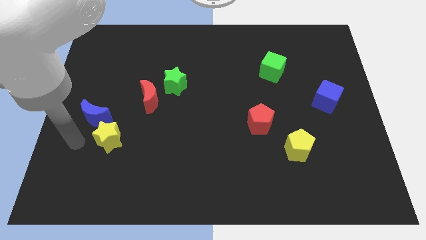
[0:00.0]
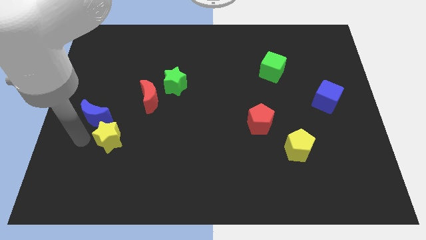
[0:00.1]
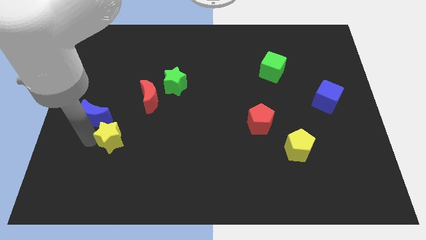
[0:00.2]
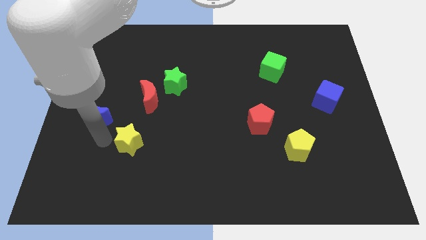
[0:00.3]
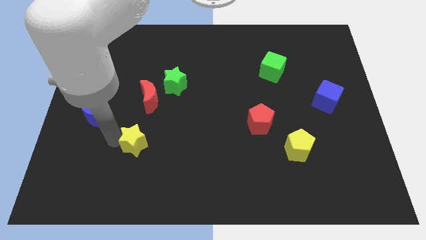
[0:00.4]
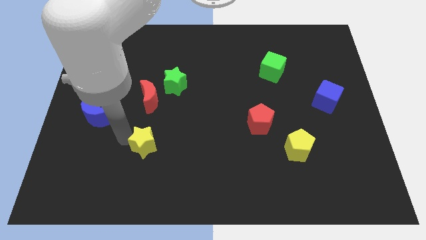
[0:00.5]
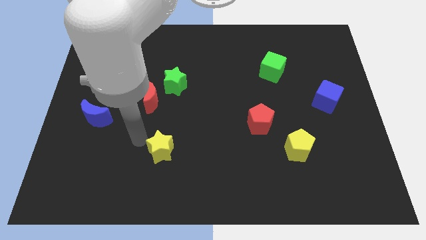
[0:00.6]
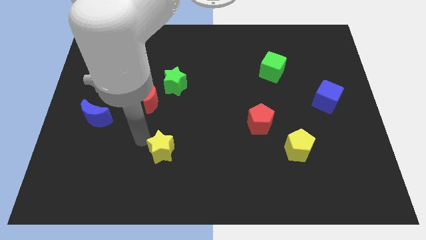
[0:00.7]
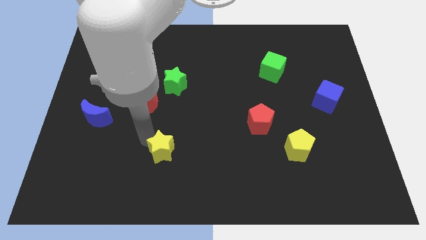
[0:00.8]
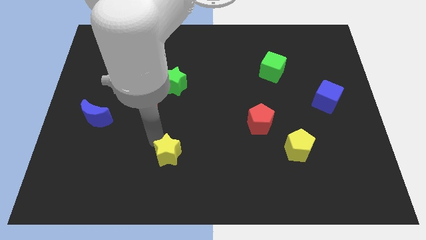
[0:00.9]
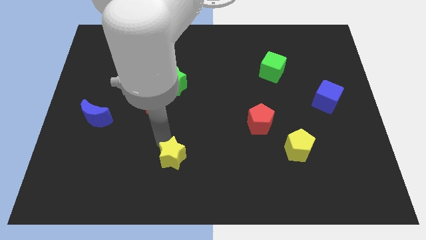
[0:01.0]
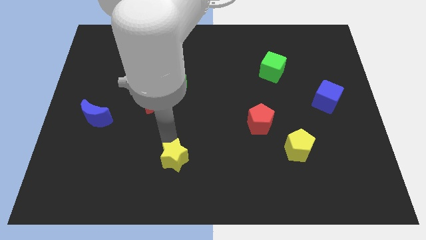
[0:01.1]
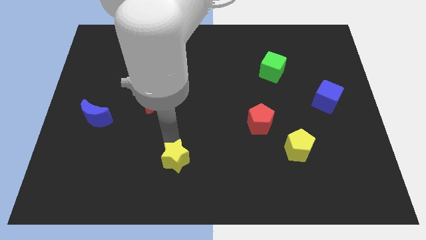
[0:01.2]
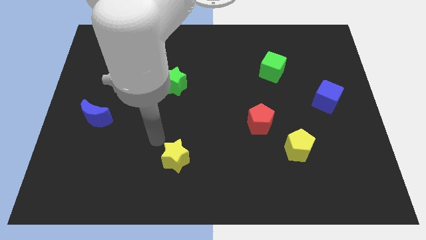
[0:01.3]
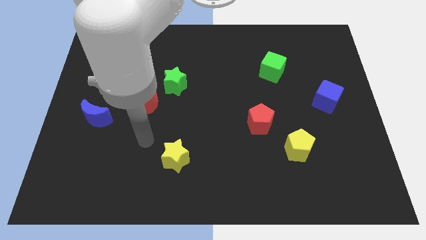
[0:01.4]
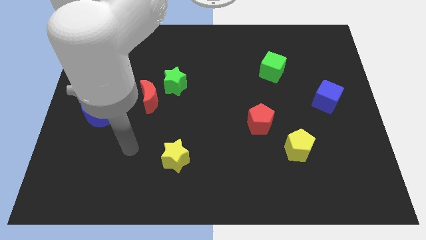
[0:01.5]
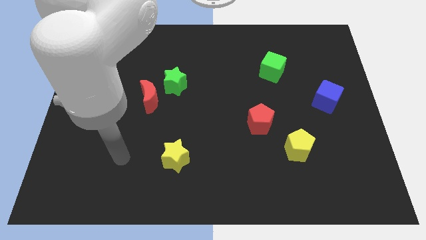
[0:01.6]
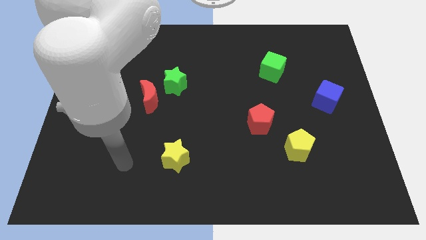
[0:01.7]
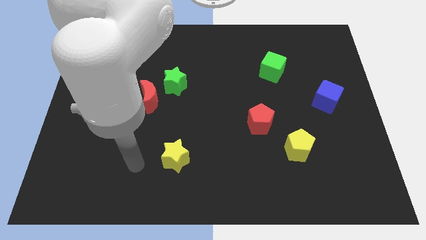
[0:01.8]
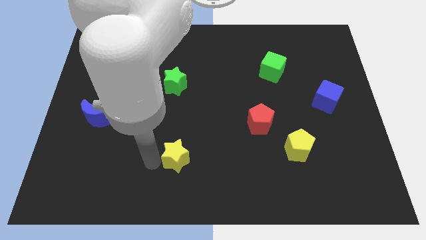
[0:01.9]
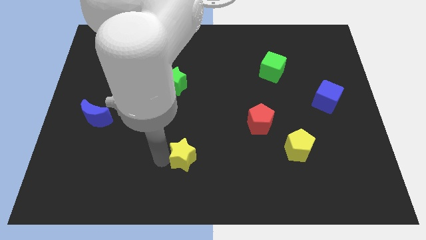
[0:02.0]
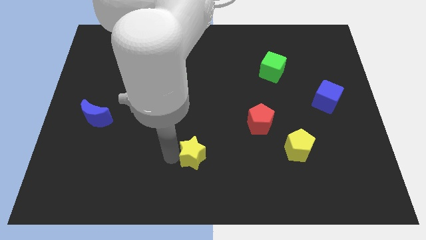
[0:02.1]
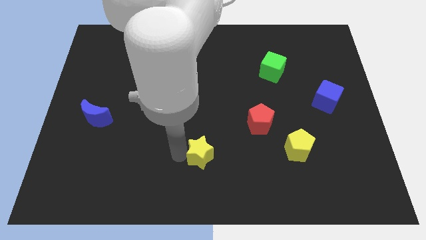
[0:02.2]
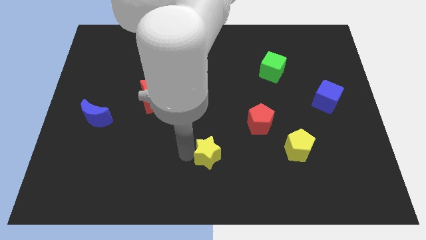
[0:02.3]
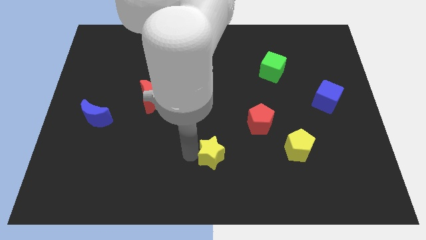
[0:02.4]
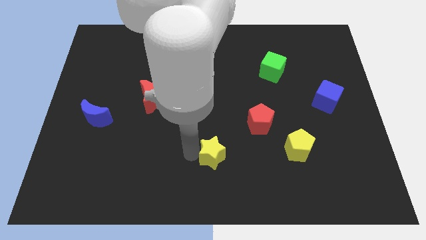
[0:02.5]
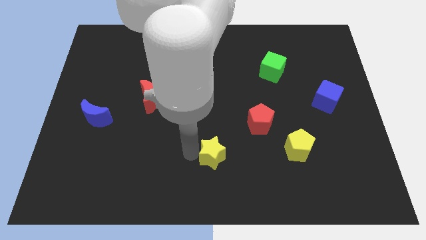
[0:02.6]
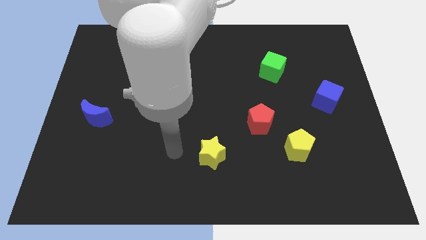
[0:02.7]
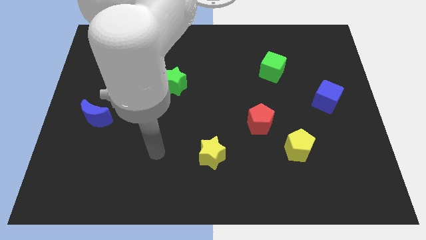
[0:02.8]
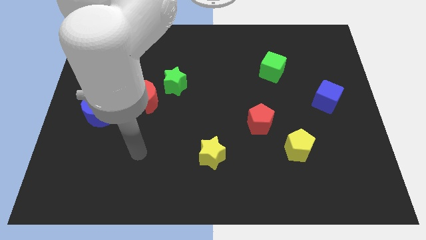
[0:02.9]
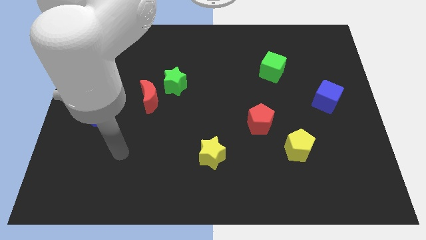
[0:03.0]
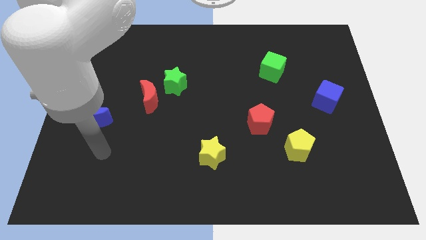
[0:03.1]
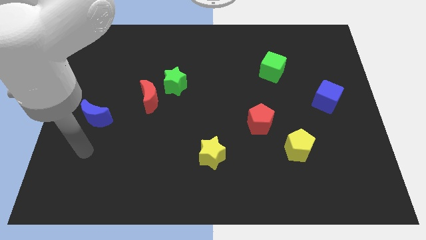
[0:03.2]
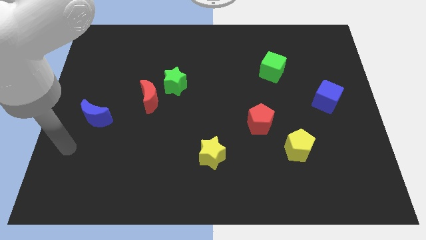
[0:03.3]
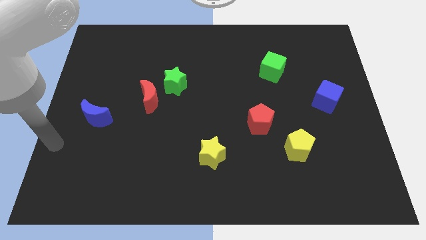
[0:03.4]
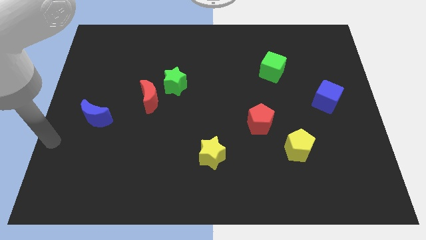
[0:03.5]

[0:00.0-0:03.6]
place the yellow star horizontally to the yellow pentagon

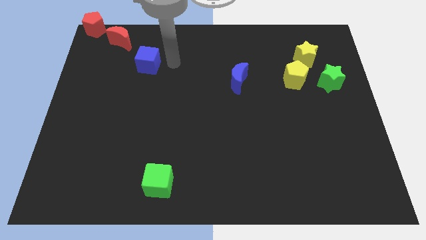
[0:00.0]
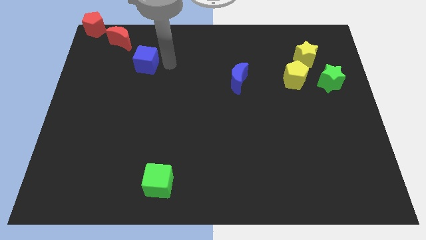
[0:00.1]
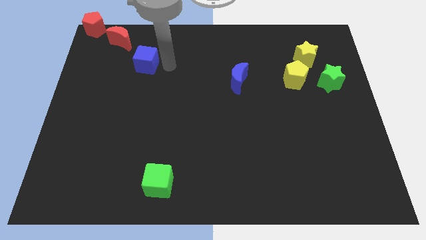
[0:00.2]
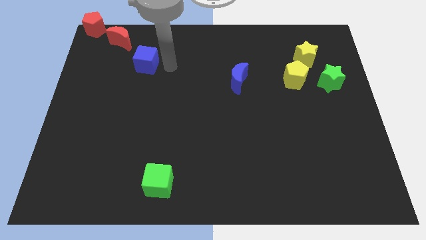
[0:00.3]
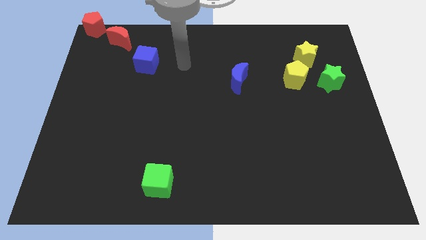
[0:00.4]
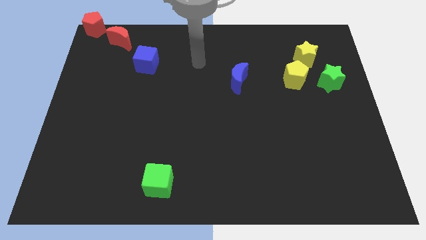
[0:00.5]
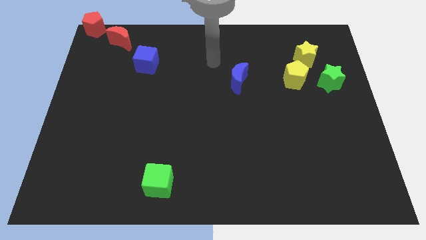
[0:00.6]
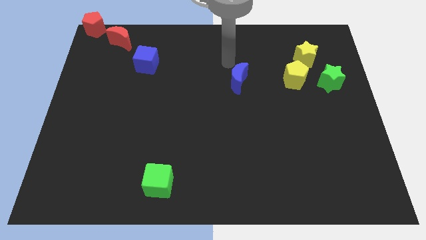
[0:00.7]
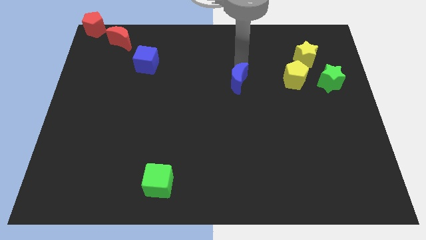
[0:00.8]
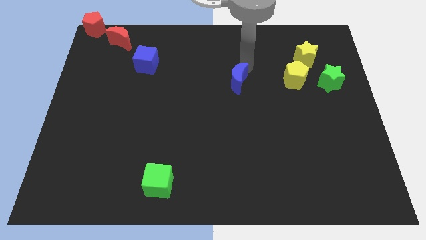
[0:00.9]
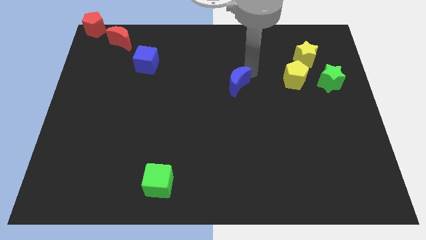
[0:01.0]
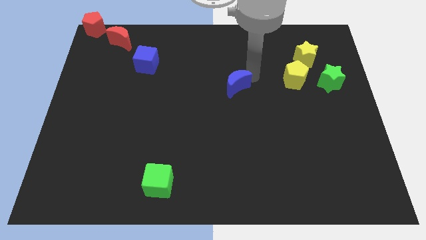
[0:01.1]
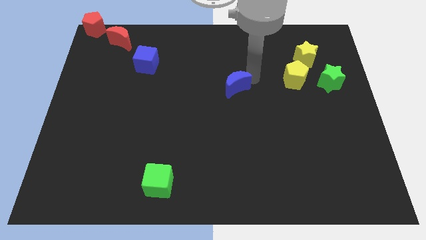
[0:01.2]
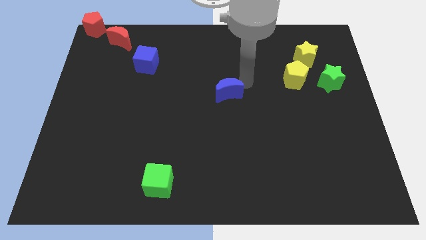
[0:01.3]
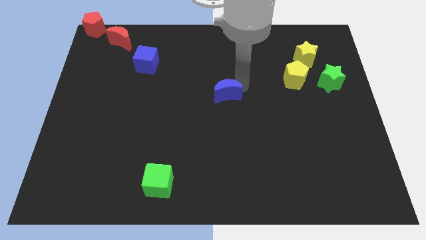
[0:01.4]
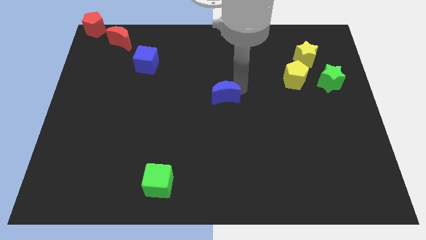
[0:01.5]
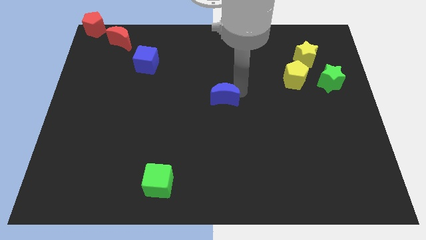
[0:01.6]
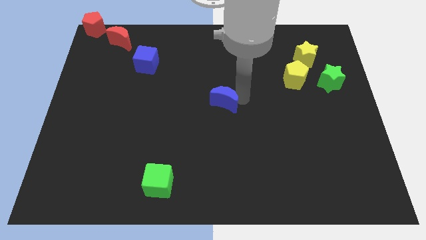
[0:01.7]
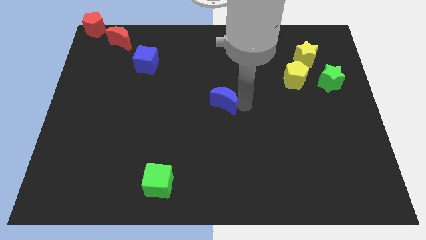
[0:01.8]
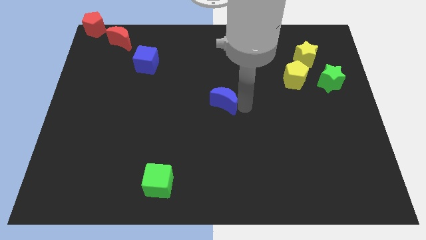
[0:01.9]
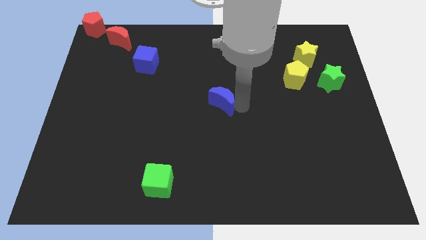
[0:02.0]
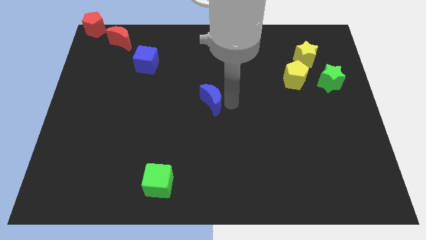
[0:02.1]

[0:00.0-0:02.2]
place the blue moon at the center of the board

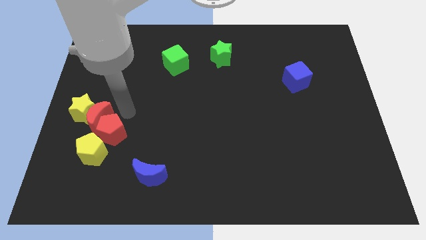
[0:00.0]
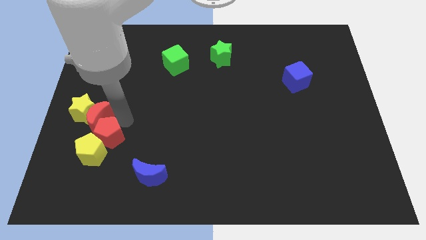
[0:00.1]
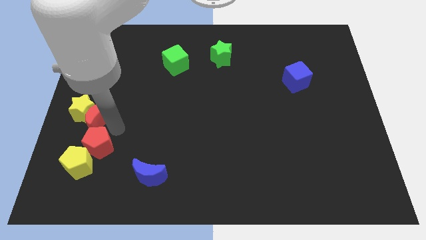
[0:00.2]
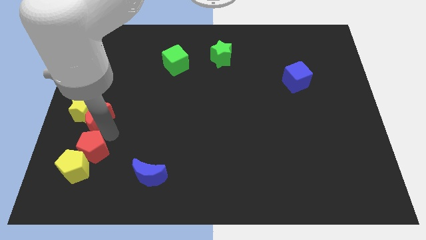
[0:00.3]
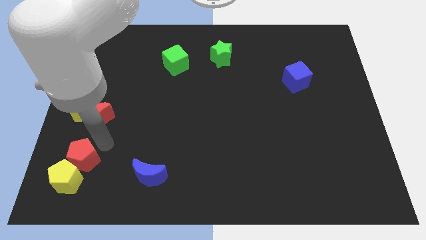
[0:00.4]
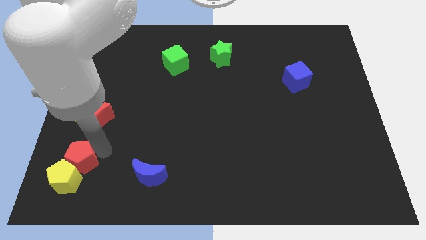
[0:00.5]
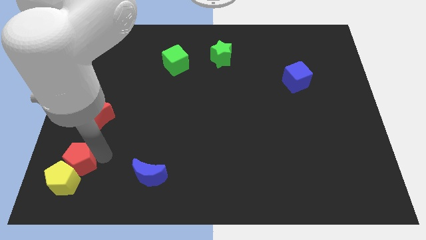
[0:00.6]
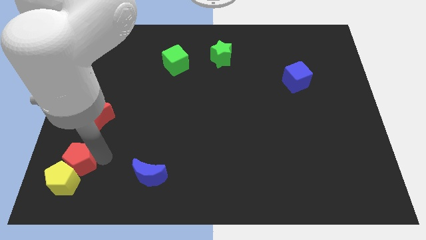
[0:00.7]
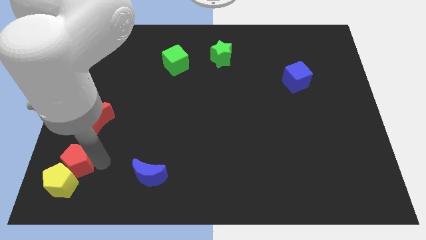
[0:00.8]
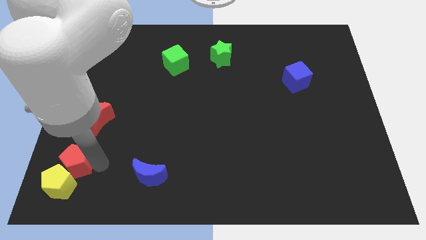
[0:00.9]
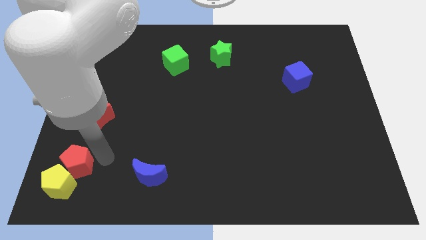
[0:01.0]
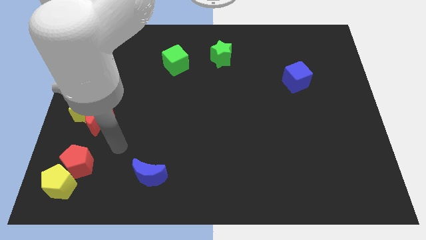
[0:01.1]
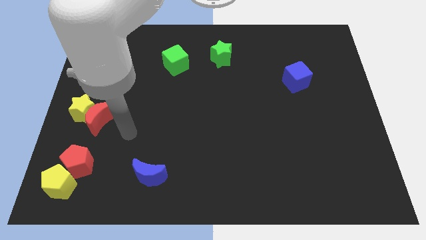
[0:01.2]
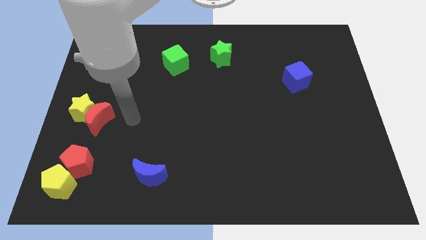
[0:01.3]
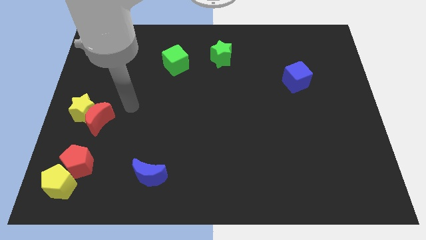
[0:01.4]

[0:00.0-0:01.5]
move the yellow pentagon with the red pentagon towards the bottom left of the board

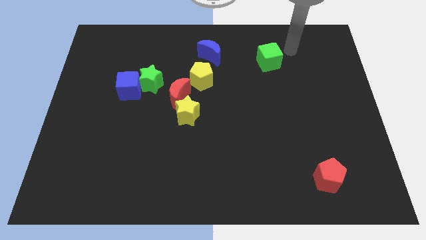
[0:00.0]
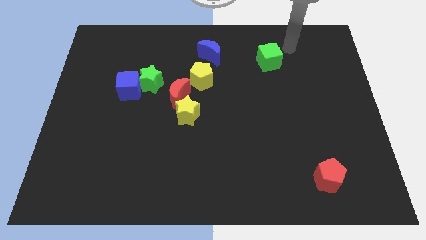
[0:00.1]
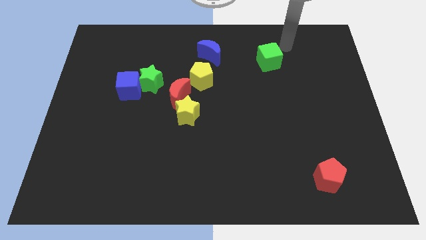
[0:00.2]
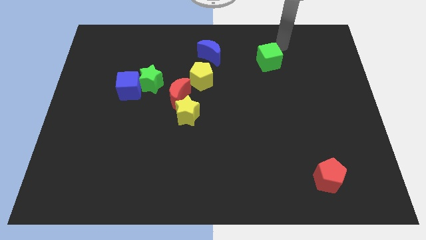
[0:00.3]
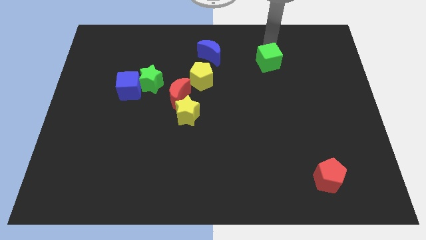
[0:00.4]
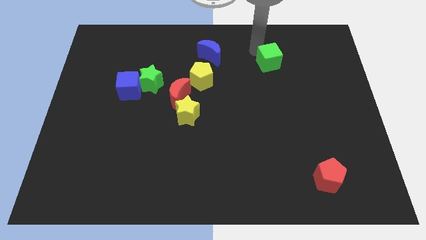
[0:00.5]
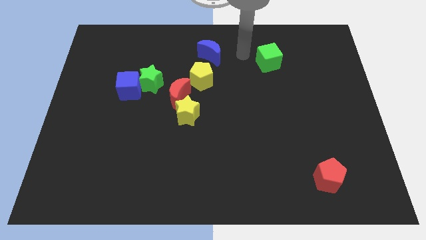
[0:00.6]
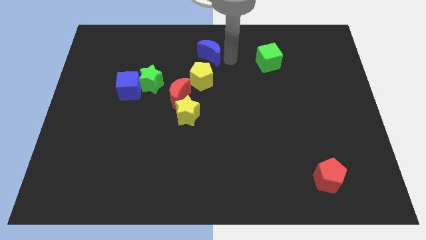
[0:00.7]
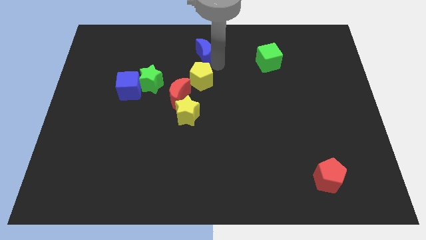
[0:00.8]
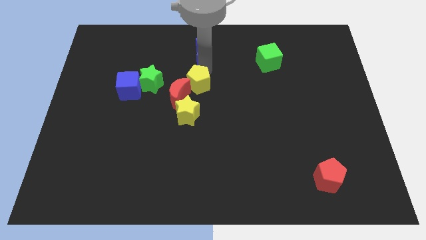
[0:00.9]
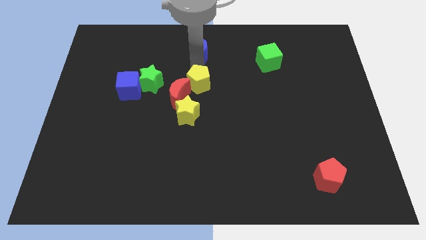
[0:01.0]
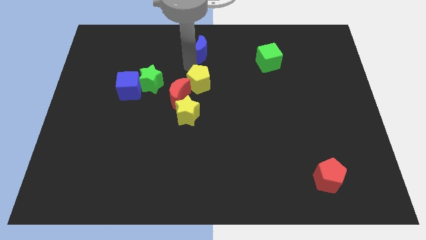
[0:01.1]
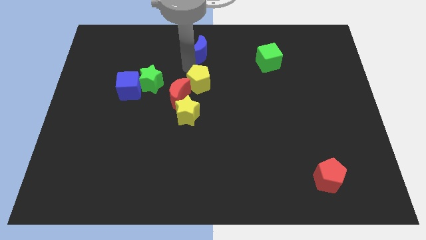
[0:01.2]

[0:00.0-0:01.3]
move your arm to the bottom of the blue moon

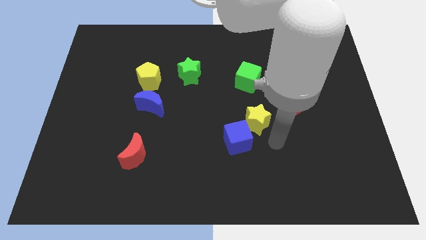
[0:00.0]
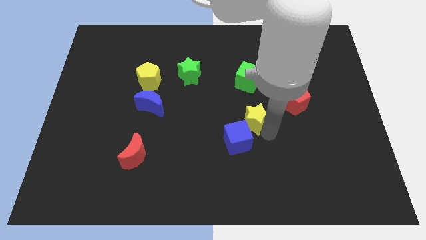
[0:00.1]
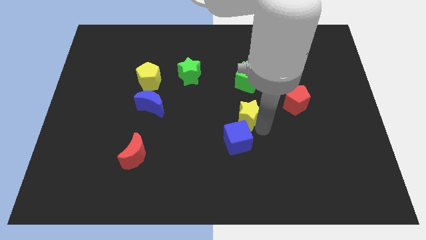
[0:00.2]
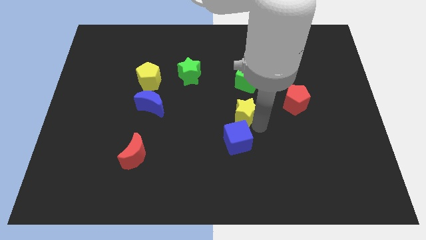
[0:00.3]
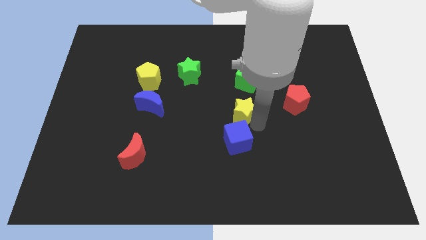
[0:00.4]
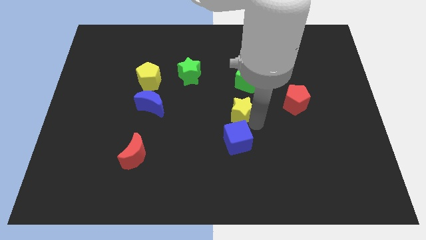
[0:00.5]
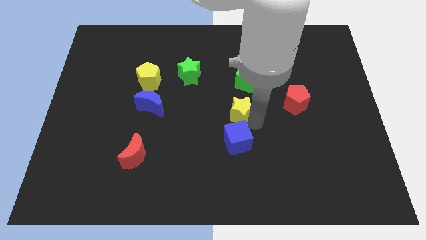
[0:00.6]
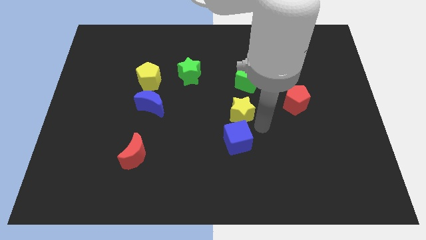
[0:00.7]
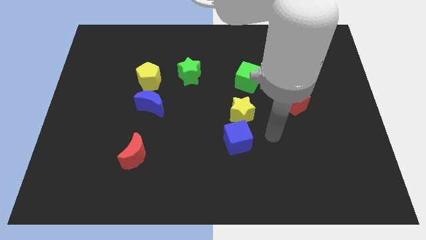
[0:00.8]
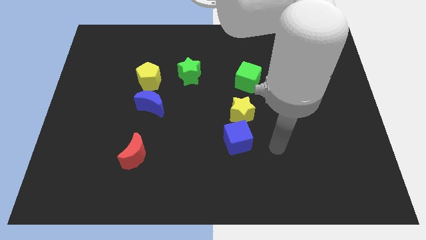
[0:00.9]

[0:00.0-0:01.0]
move yellow star above the blue cube
